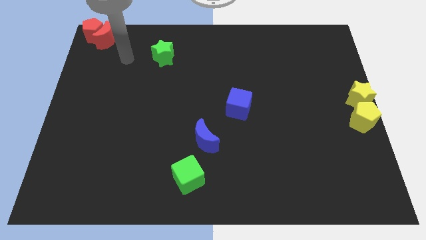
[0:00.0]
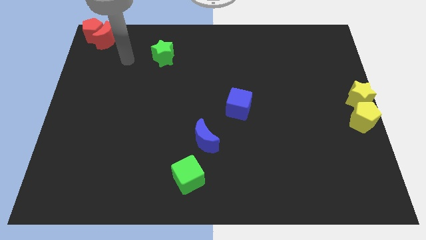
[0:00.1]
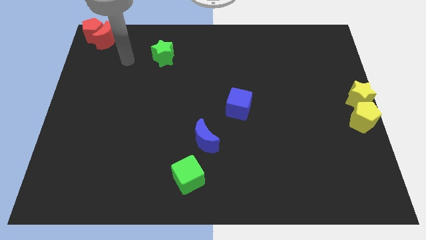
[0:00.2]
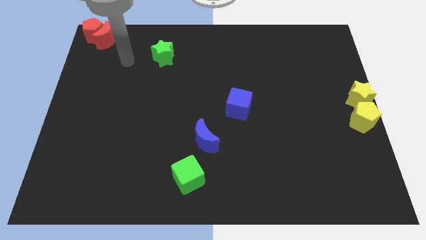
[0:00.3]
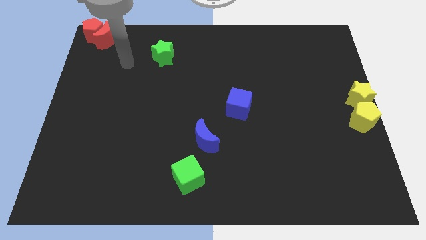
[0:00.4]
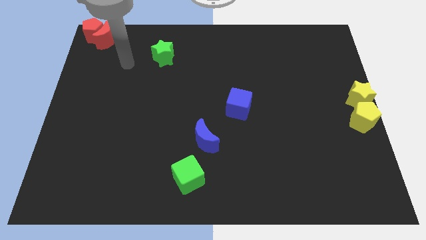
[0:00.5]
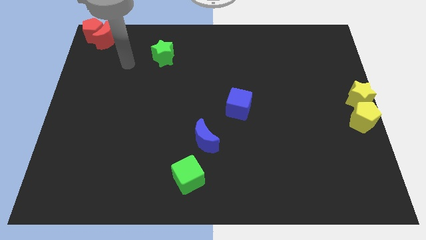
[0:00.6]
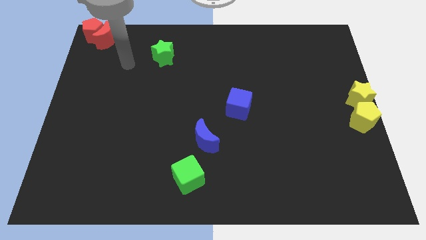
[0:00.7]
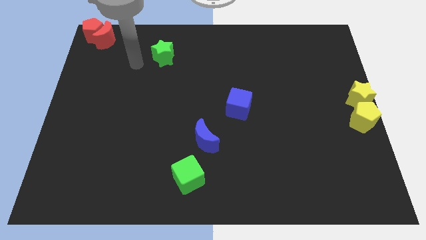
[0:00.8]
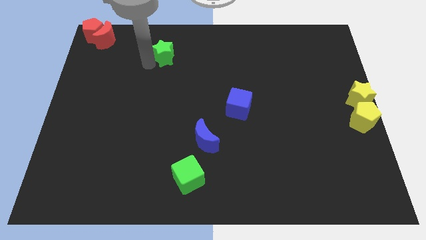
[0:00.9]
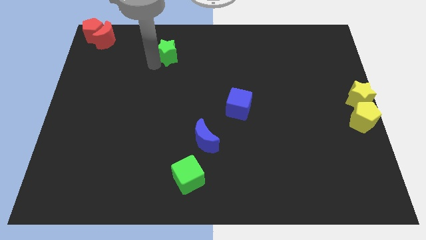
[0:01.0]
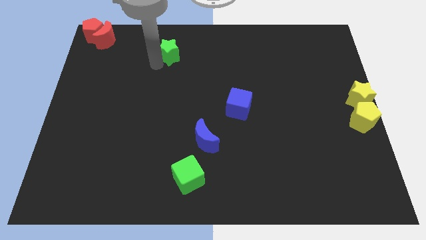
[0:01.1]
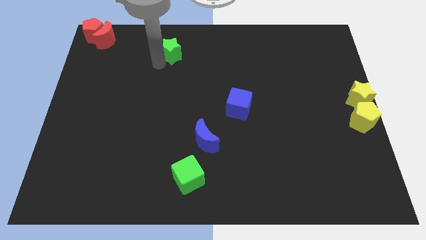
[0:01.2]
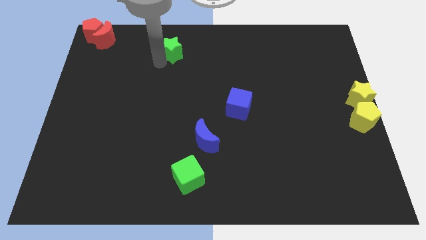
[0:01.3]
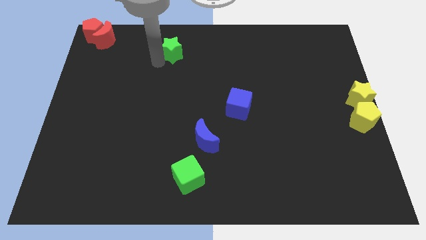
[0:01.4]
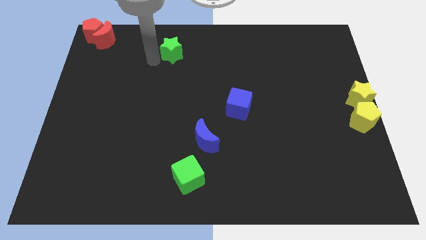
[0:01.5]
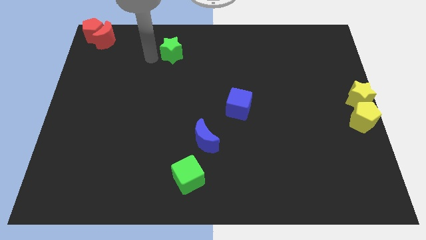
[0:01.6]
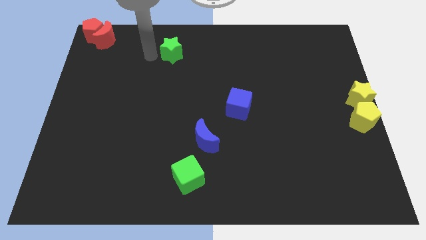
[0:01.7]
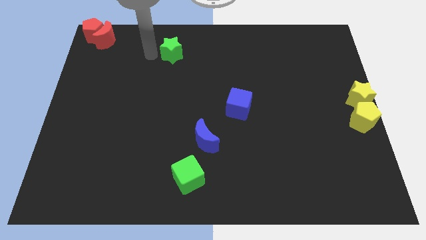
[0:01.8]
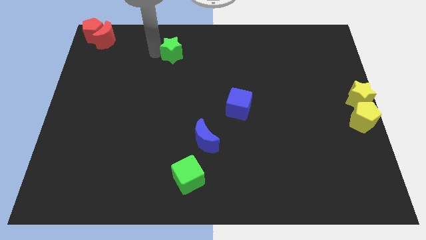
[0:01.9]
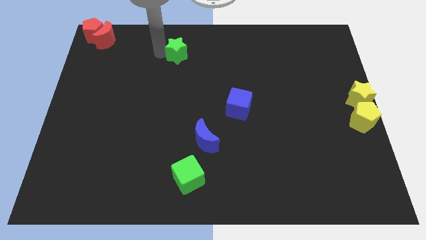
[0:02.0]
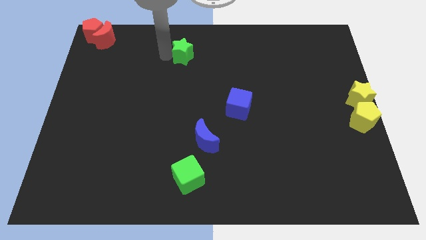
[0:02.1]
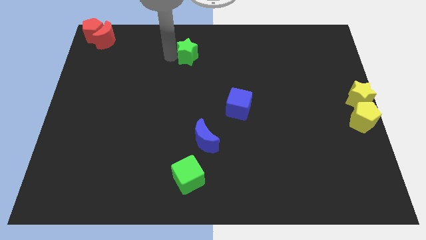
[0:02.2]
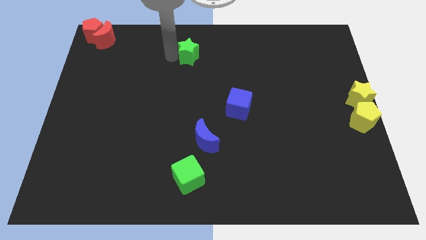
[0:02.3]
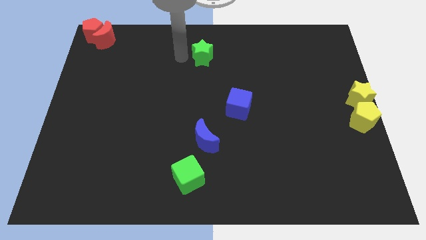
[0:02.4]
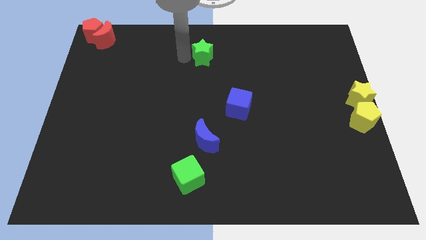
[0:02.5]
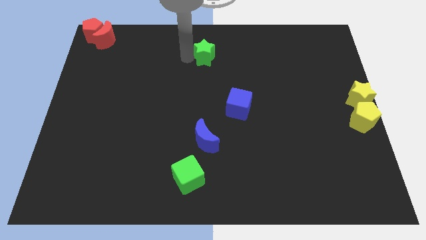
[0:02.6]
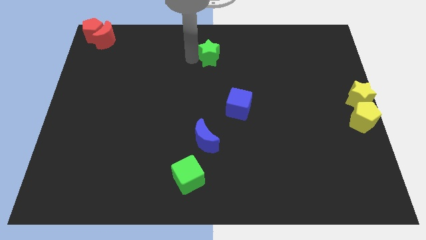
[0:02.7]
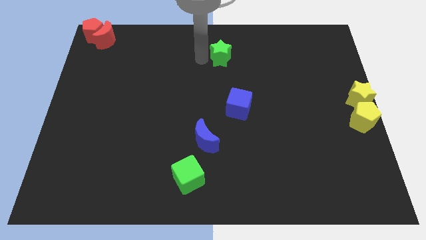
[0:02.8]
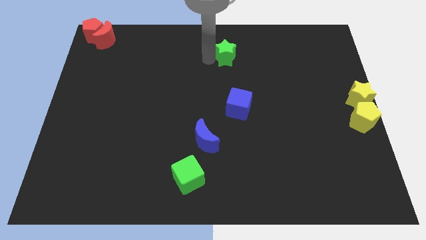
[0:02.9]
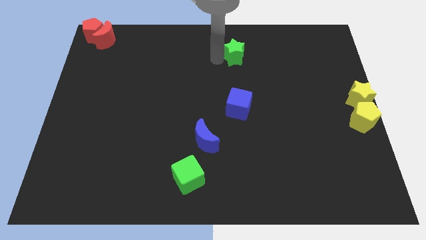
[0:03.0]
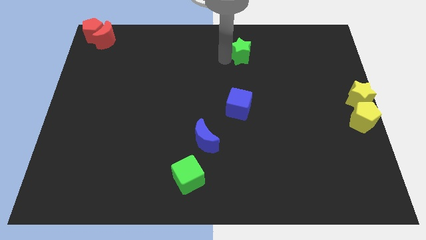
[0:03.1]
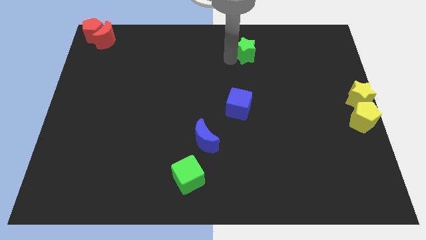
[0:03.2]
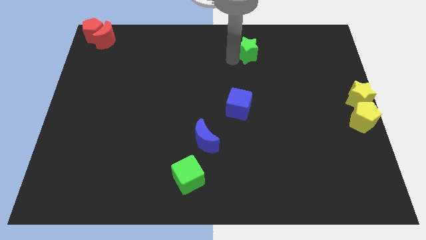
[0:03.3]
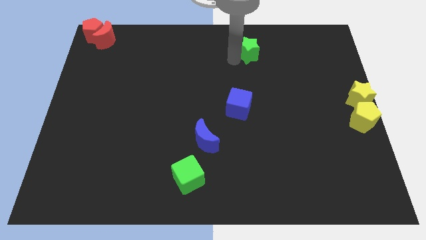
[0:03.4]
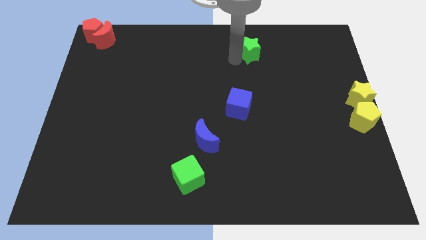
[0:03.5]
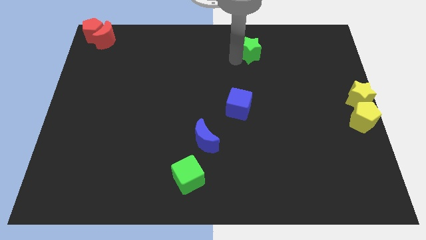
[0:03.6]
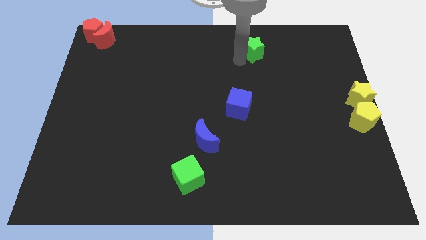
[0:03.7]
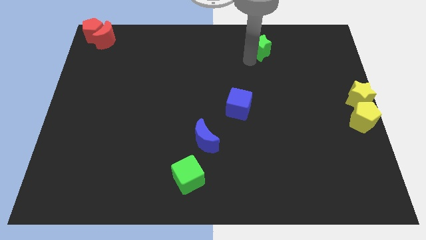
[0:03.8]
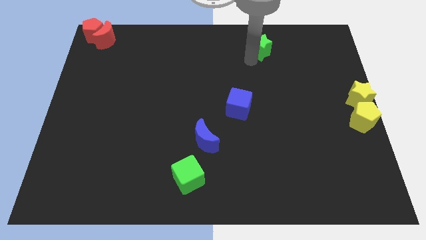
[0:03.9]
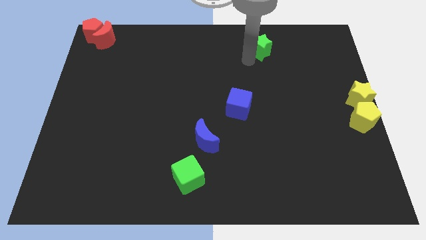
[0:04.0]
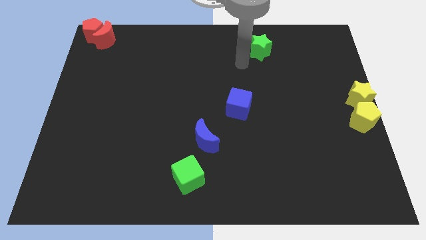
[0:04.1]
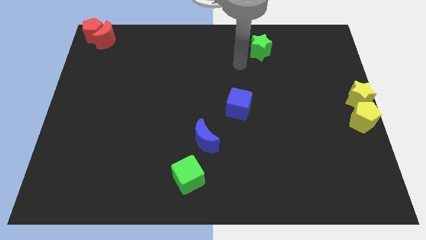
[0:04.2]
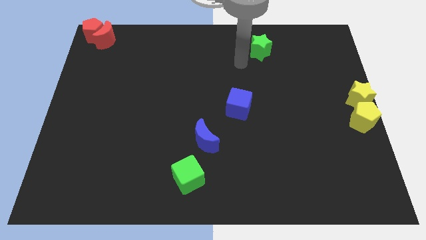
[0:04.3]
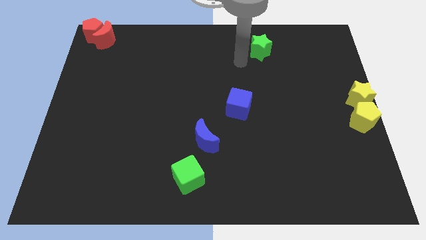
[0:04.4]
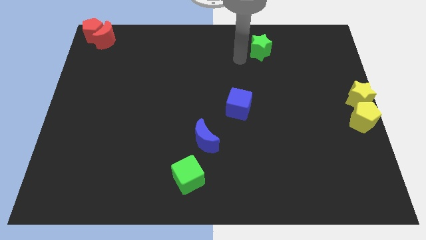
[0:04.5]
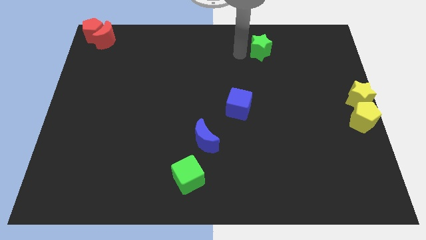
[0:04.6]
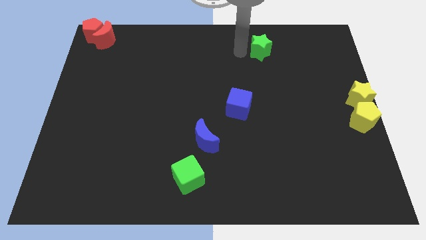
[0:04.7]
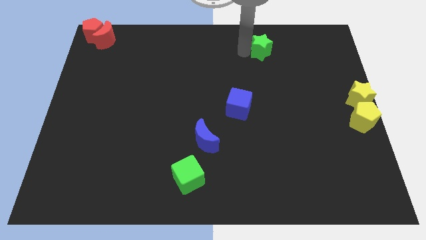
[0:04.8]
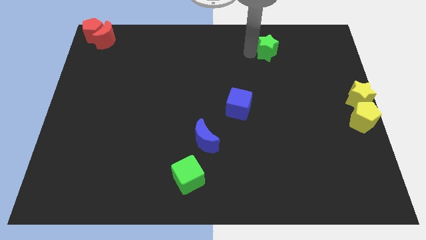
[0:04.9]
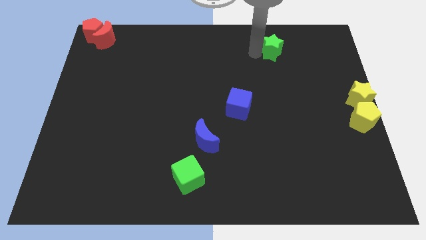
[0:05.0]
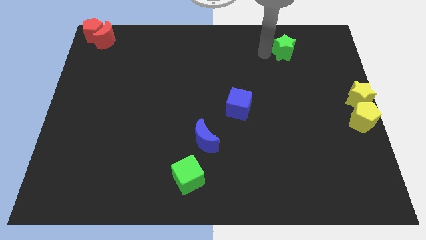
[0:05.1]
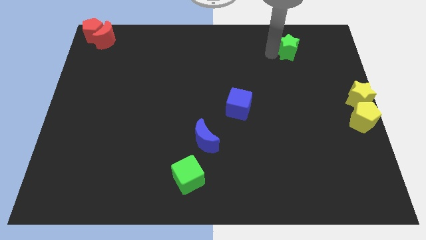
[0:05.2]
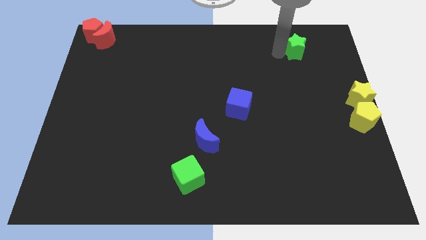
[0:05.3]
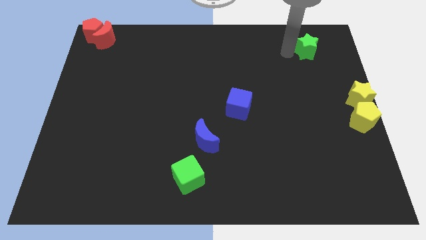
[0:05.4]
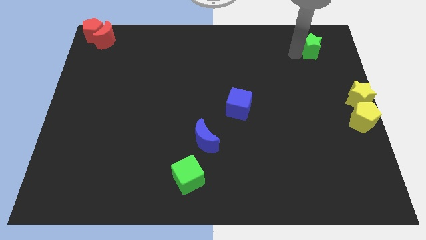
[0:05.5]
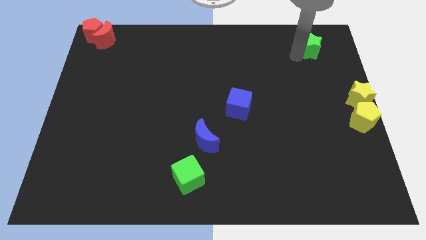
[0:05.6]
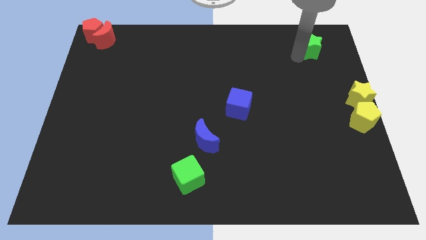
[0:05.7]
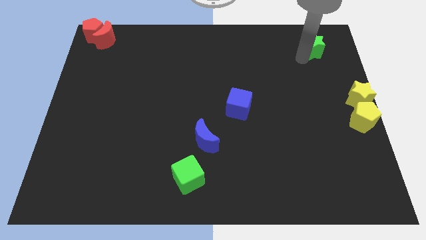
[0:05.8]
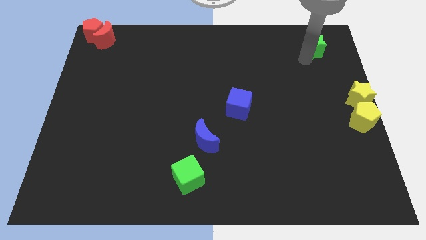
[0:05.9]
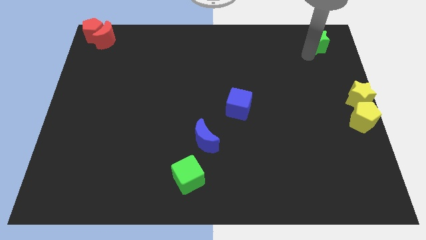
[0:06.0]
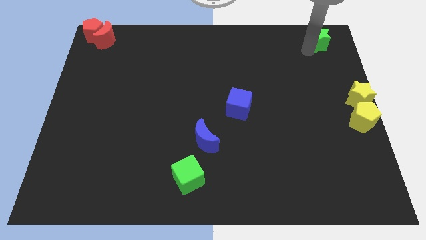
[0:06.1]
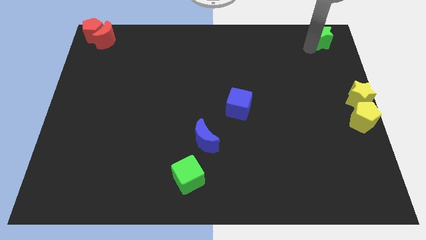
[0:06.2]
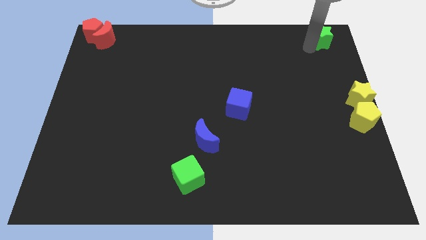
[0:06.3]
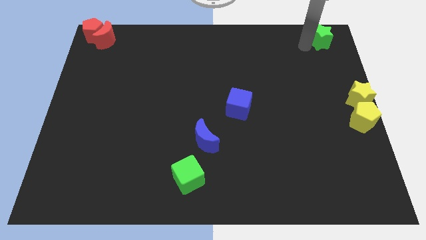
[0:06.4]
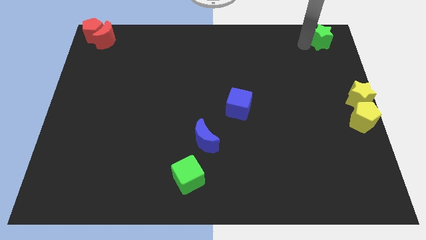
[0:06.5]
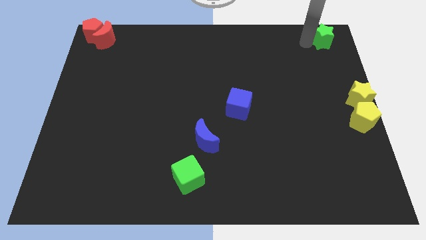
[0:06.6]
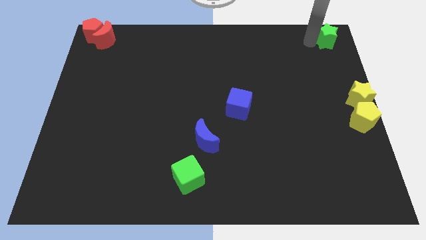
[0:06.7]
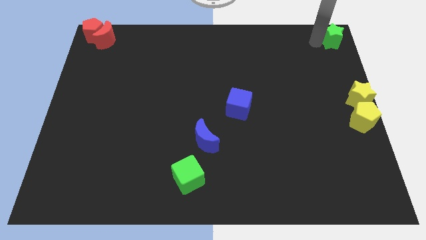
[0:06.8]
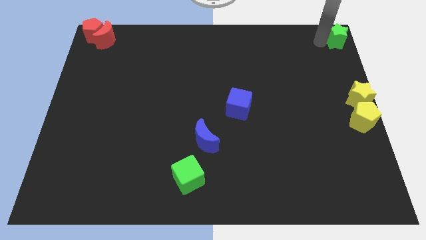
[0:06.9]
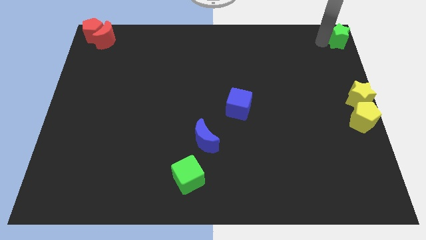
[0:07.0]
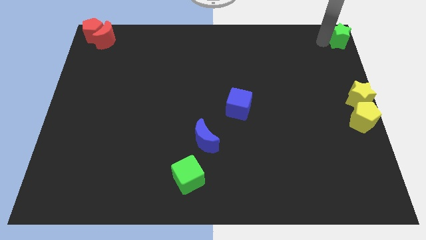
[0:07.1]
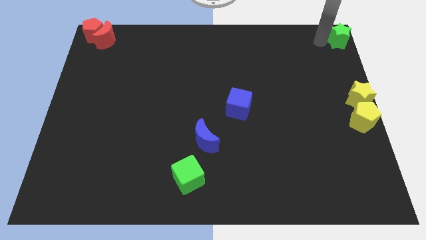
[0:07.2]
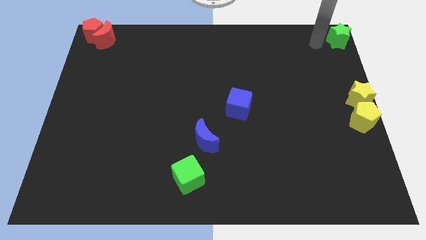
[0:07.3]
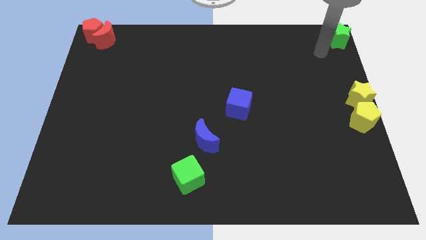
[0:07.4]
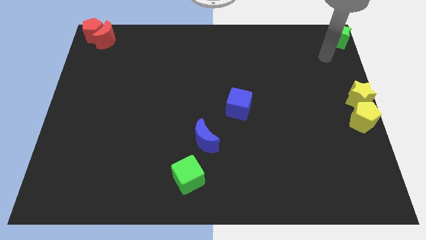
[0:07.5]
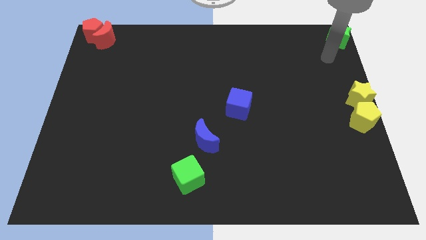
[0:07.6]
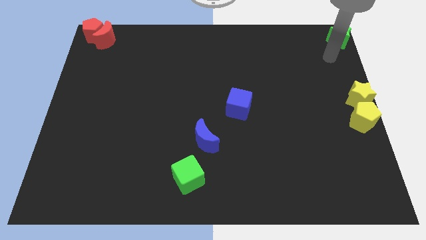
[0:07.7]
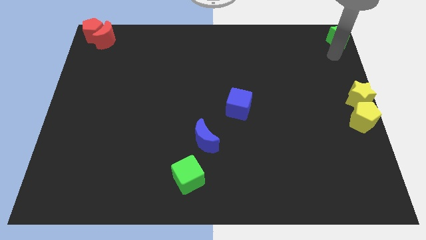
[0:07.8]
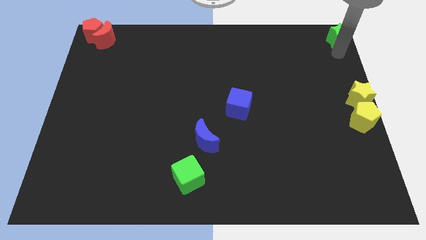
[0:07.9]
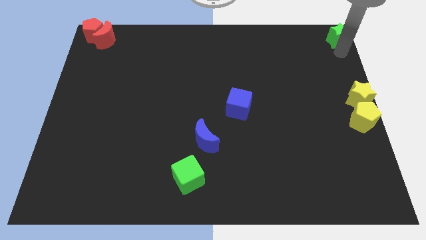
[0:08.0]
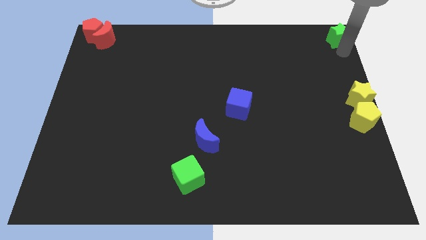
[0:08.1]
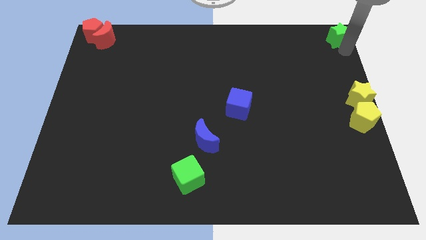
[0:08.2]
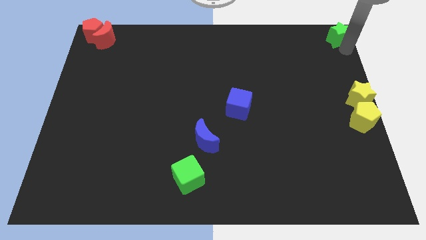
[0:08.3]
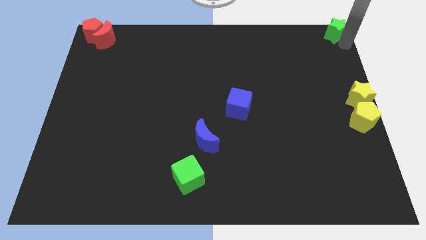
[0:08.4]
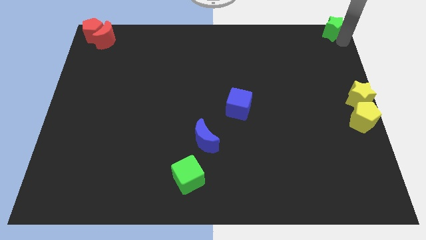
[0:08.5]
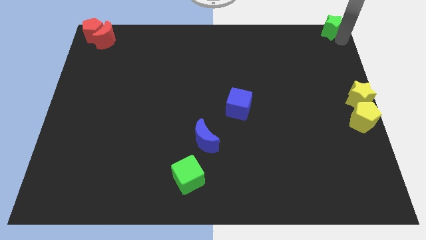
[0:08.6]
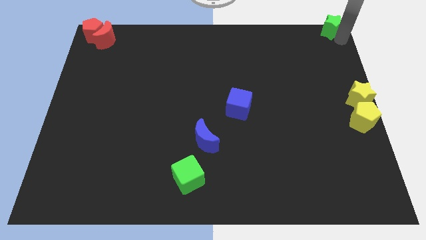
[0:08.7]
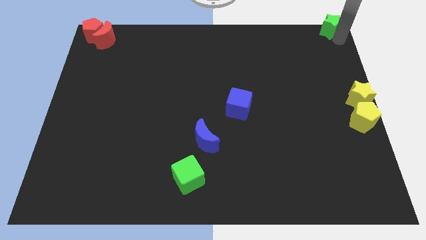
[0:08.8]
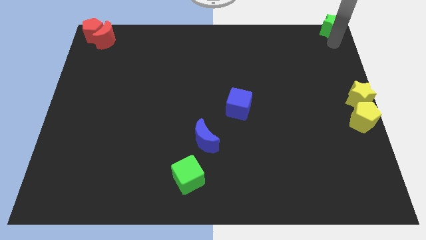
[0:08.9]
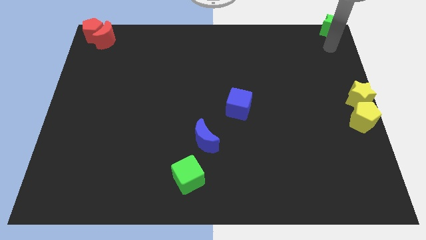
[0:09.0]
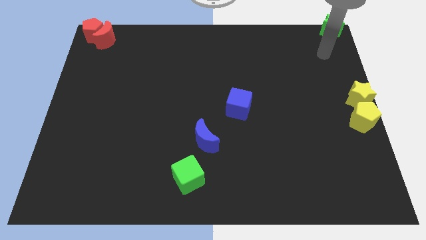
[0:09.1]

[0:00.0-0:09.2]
move the green star to the top right corner of the board
